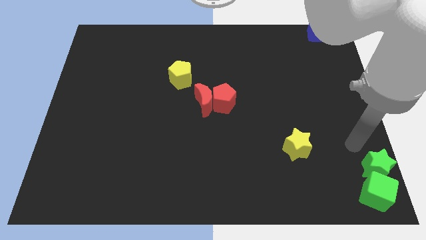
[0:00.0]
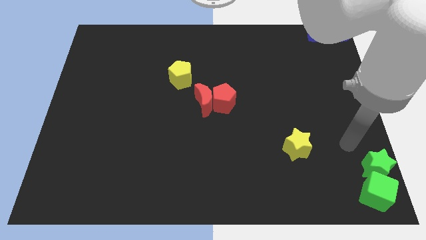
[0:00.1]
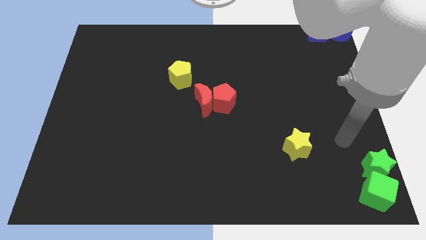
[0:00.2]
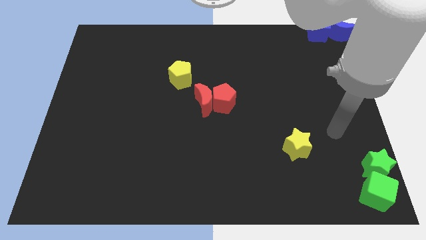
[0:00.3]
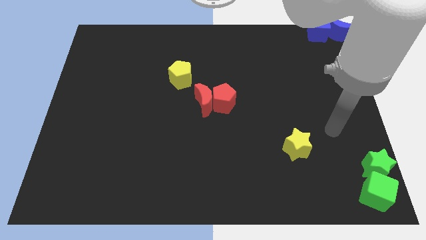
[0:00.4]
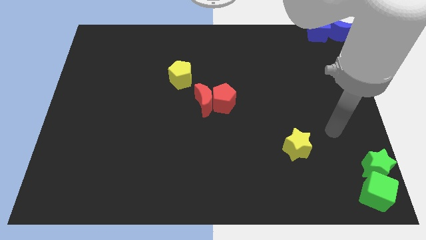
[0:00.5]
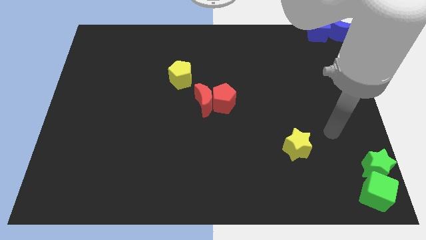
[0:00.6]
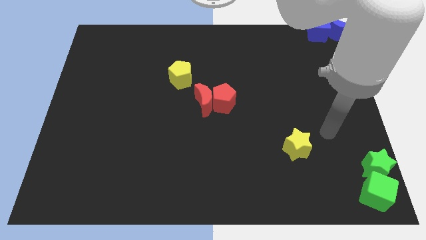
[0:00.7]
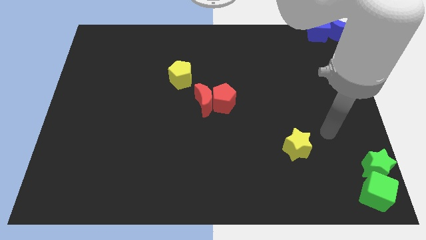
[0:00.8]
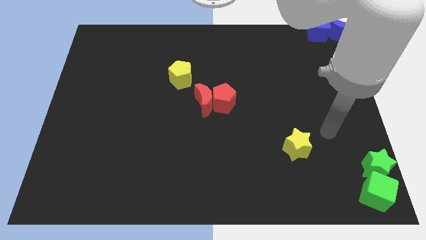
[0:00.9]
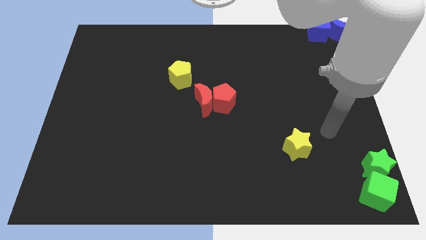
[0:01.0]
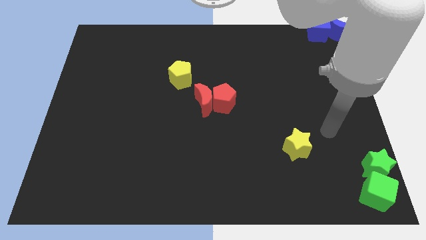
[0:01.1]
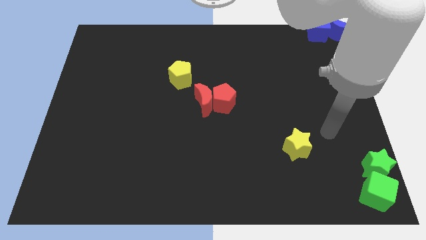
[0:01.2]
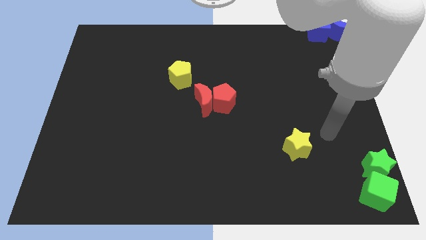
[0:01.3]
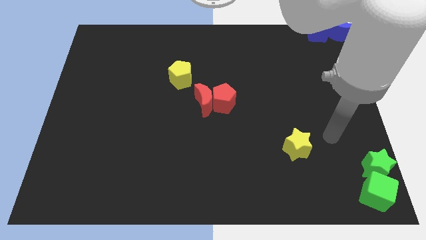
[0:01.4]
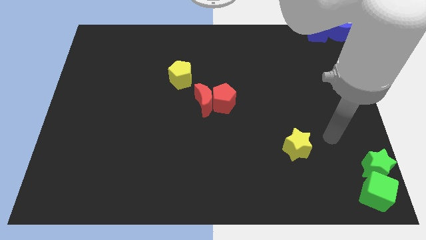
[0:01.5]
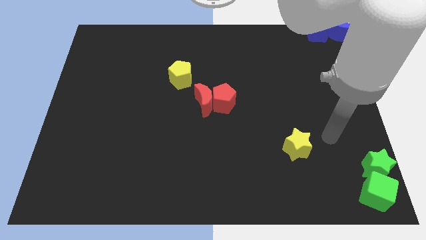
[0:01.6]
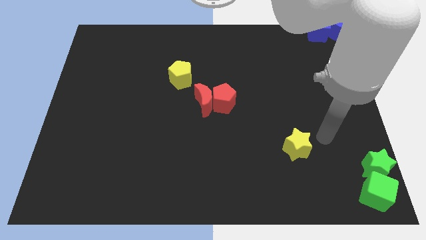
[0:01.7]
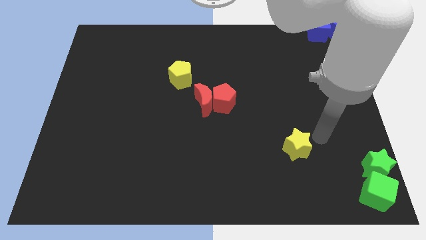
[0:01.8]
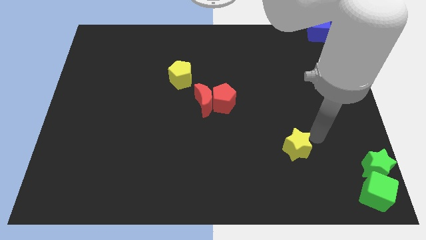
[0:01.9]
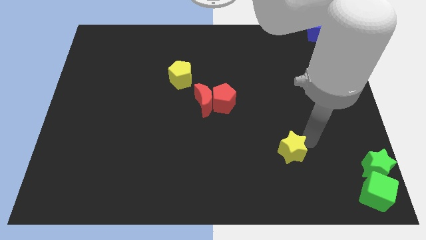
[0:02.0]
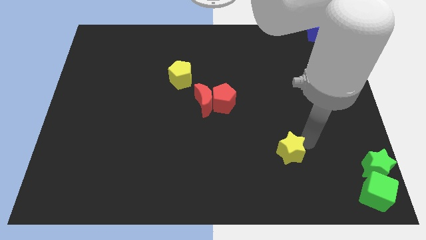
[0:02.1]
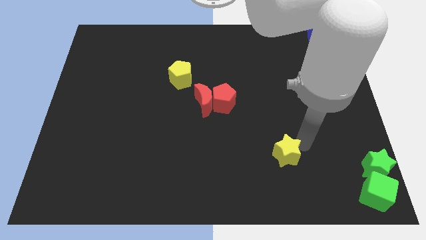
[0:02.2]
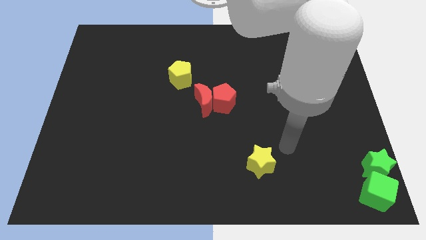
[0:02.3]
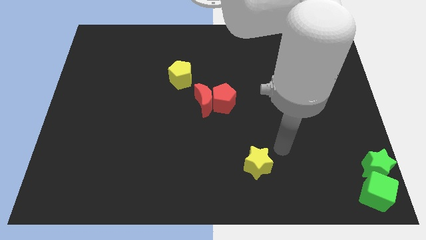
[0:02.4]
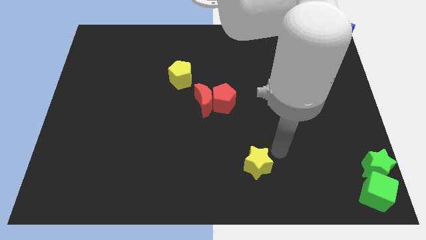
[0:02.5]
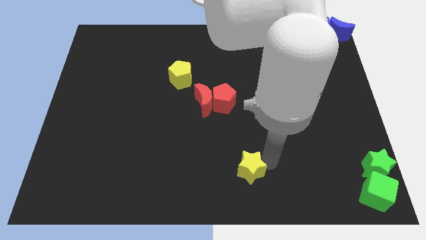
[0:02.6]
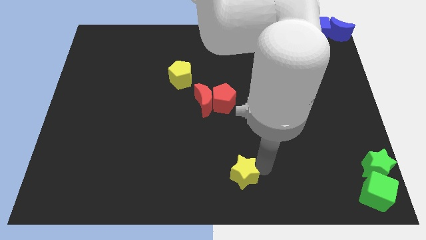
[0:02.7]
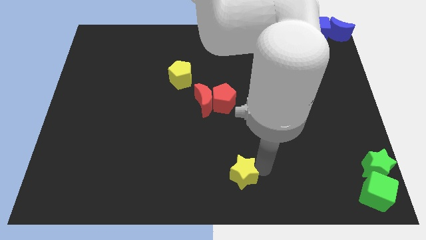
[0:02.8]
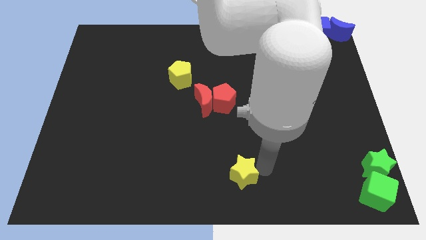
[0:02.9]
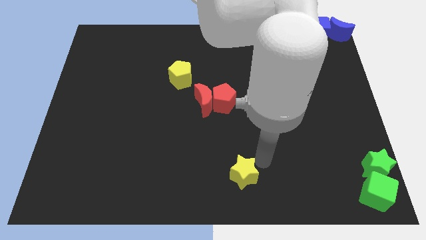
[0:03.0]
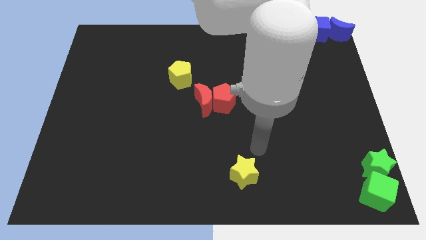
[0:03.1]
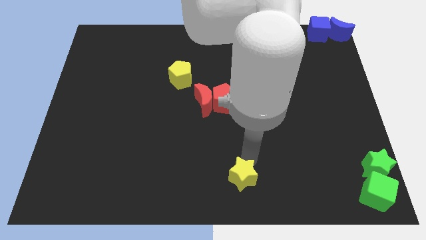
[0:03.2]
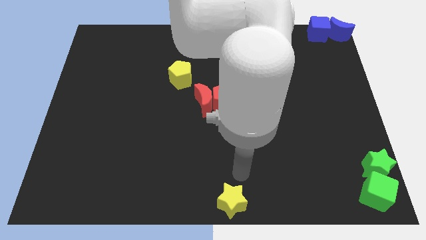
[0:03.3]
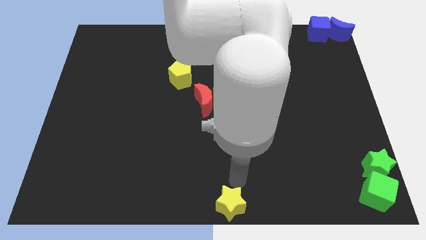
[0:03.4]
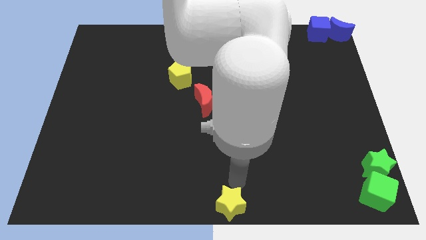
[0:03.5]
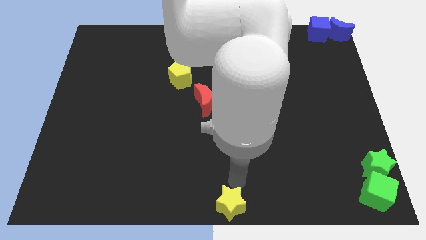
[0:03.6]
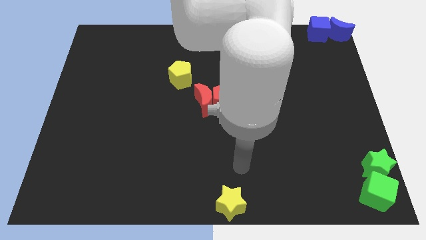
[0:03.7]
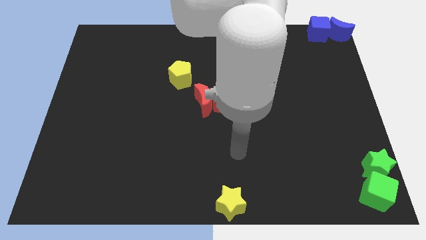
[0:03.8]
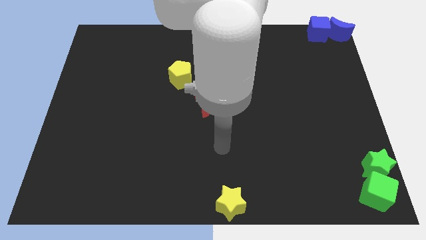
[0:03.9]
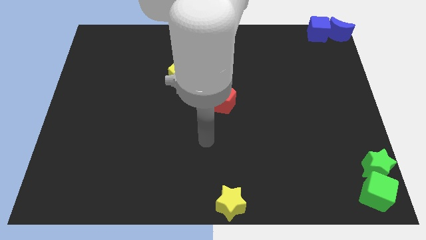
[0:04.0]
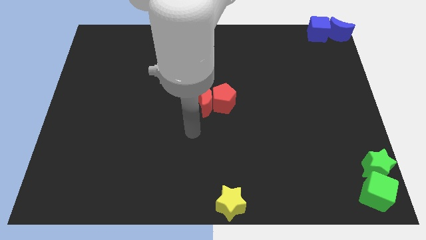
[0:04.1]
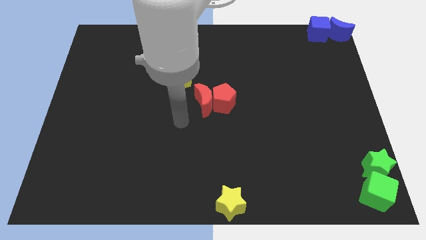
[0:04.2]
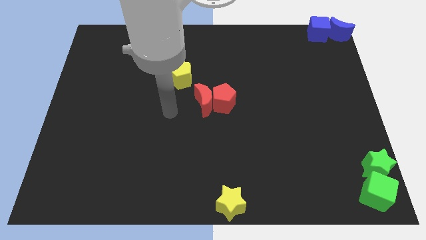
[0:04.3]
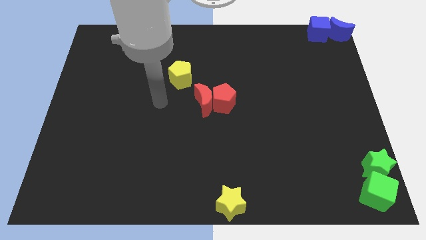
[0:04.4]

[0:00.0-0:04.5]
slide the yellow star to the bottom center of the board

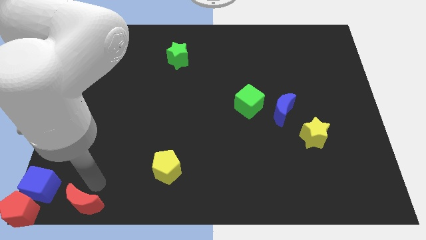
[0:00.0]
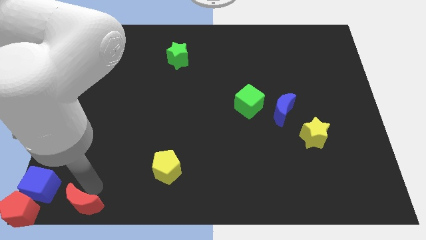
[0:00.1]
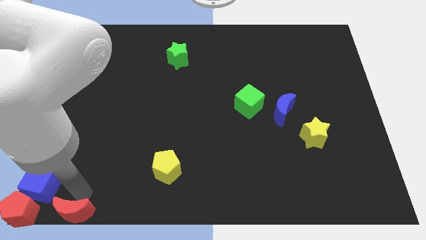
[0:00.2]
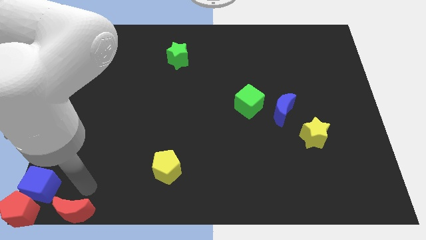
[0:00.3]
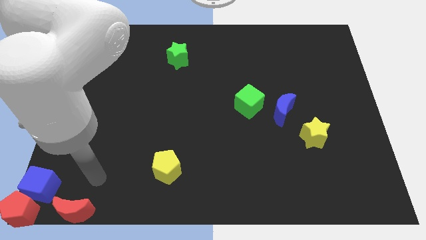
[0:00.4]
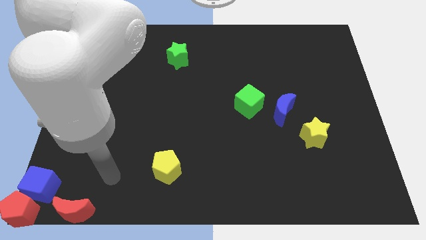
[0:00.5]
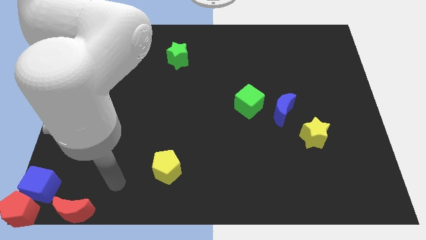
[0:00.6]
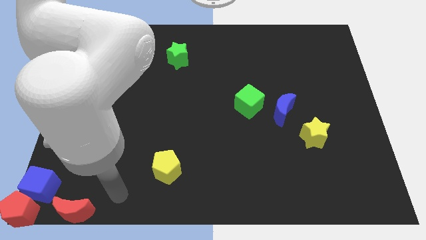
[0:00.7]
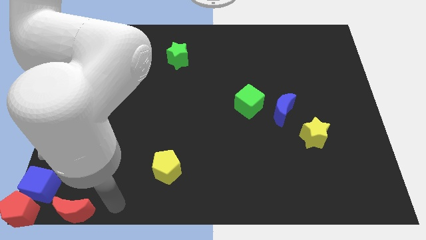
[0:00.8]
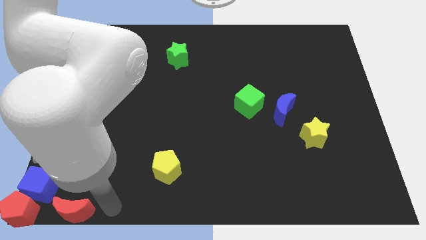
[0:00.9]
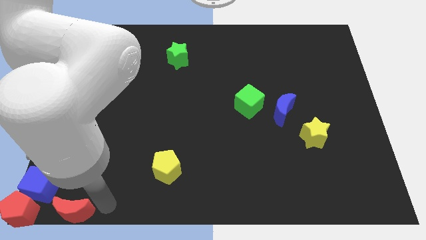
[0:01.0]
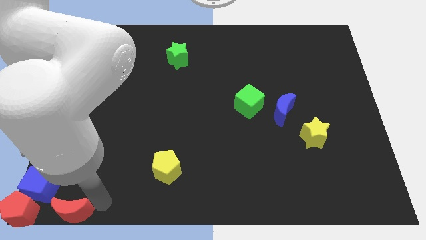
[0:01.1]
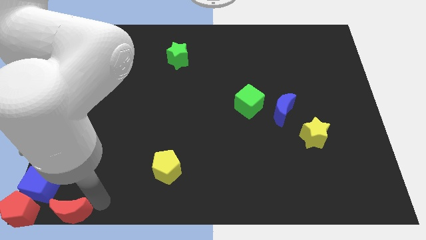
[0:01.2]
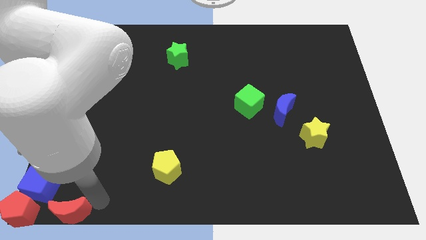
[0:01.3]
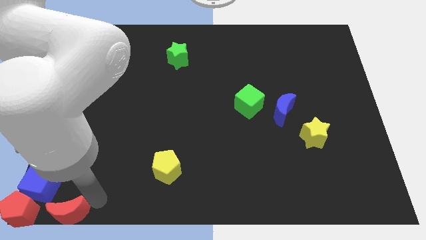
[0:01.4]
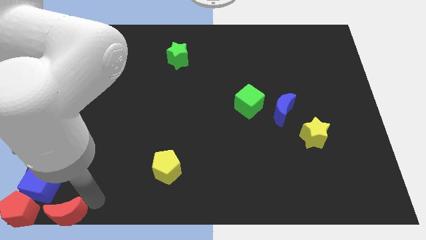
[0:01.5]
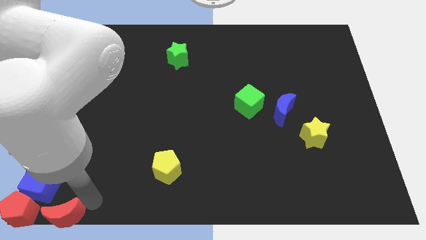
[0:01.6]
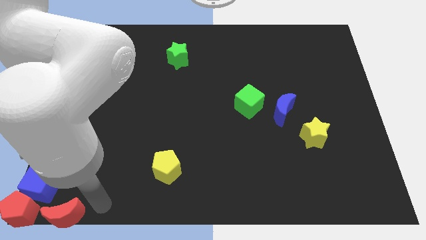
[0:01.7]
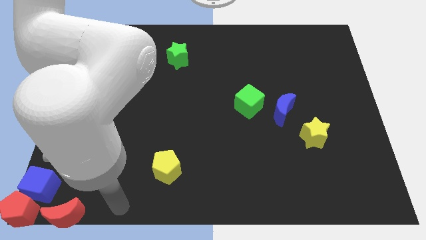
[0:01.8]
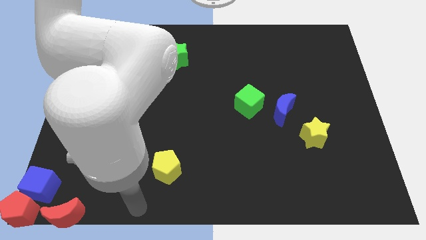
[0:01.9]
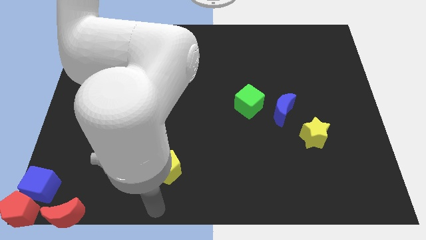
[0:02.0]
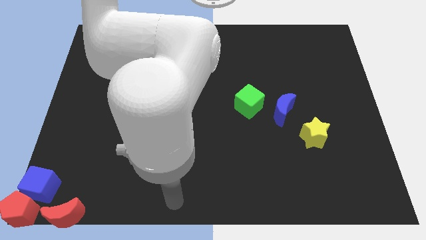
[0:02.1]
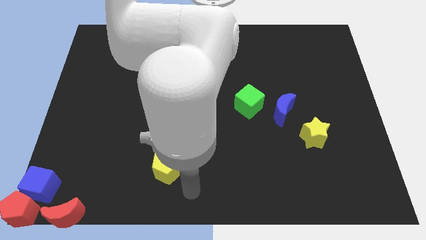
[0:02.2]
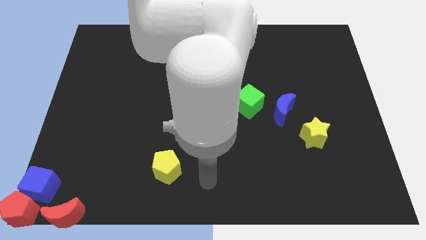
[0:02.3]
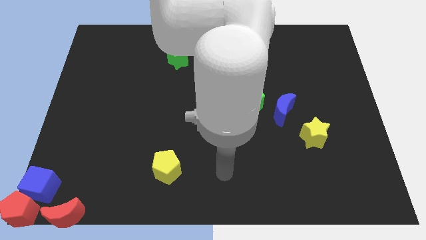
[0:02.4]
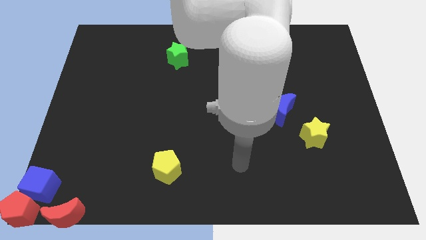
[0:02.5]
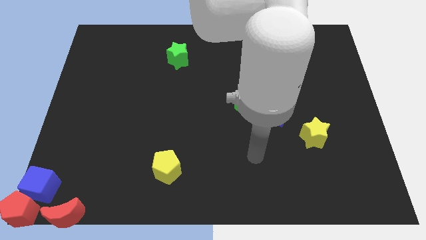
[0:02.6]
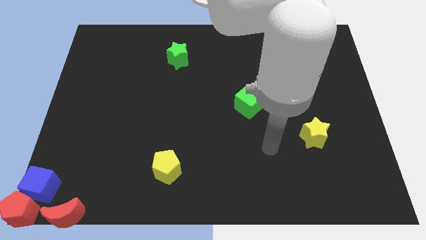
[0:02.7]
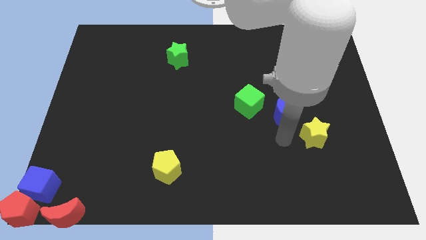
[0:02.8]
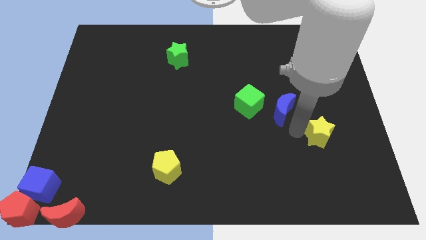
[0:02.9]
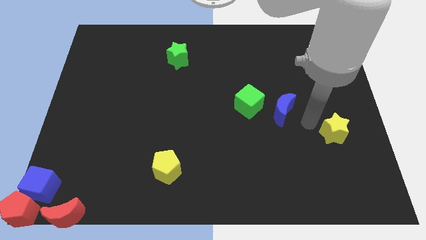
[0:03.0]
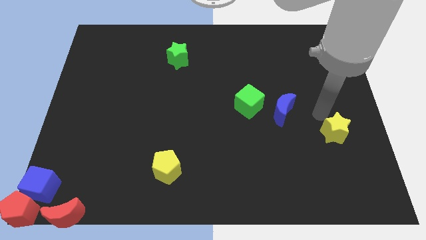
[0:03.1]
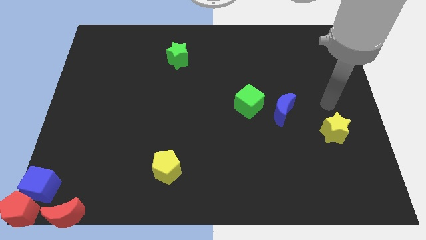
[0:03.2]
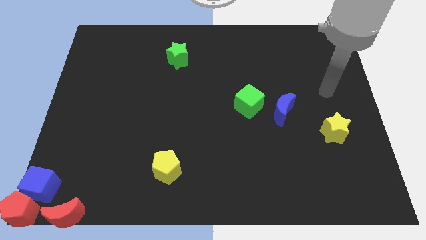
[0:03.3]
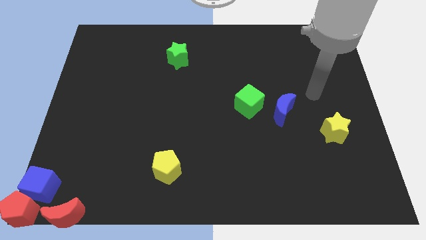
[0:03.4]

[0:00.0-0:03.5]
place the red crescent right to the red pentagon

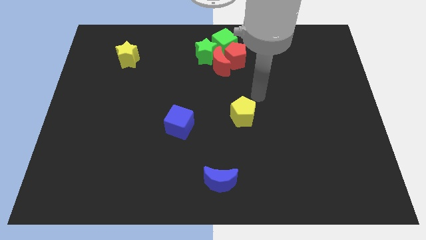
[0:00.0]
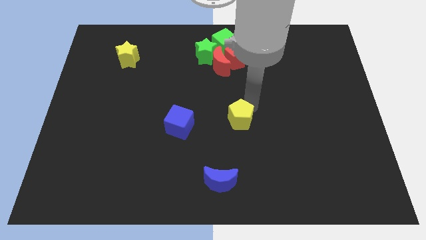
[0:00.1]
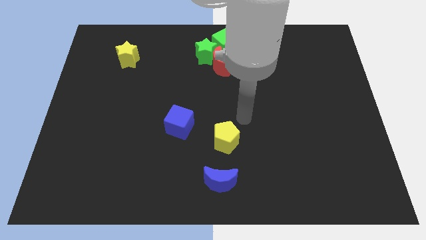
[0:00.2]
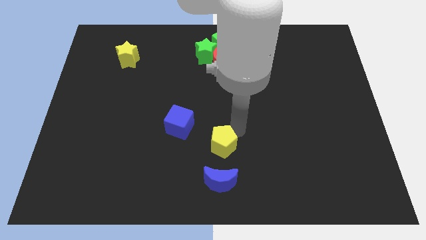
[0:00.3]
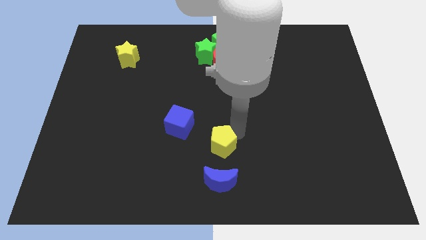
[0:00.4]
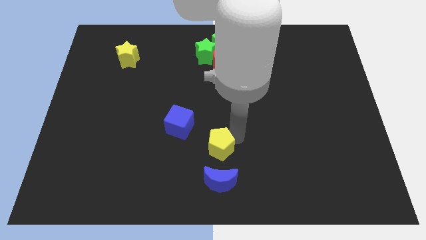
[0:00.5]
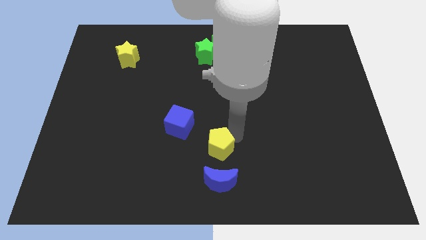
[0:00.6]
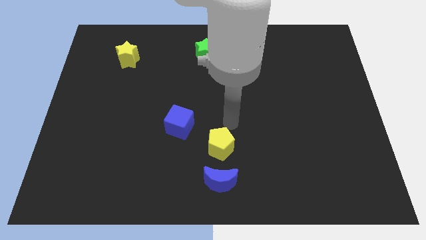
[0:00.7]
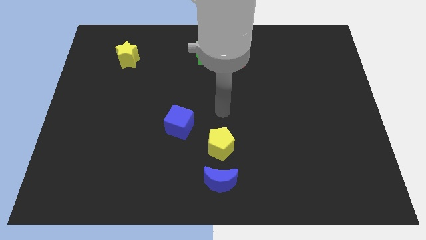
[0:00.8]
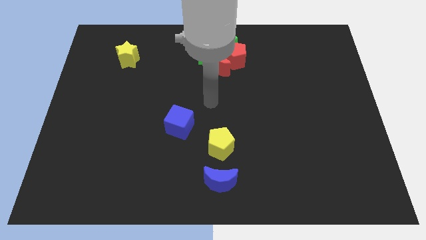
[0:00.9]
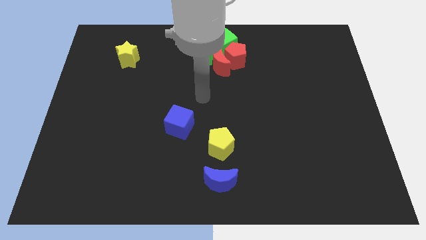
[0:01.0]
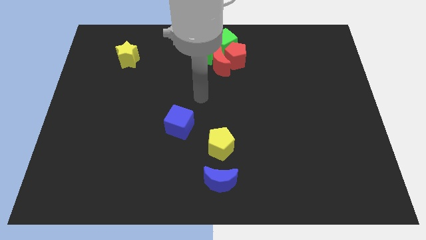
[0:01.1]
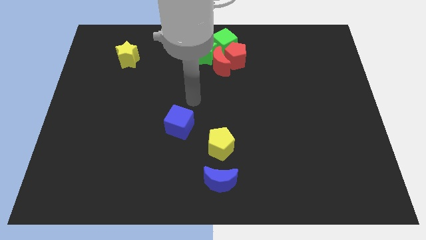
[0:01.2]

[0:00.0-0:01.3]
move the yellow pentagon close to the blue crescent
